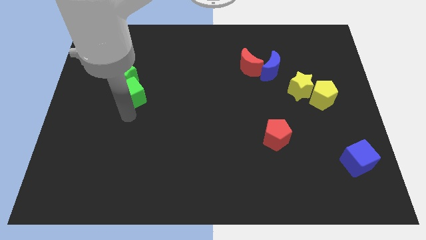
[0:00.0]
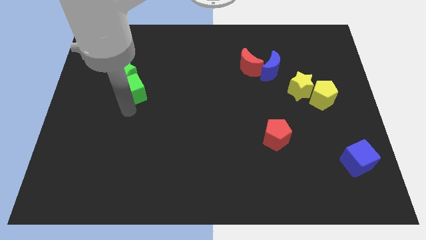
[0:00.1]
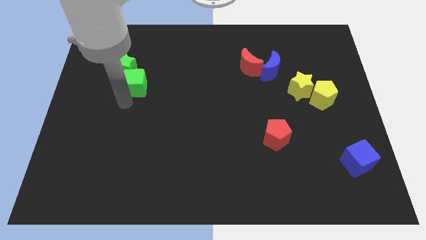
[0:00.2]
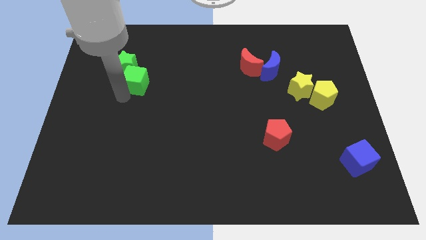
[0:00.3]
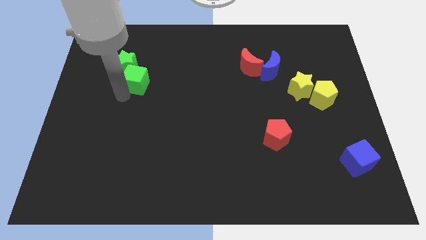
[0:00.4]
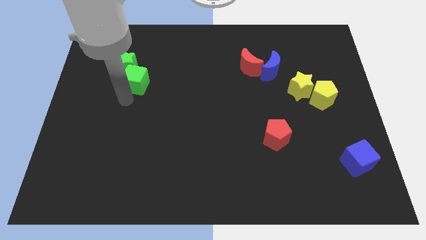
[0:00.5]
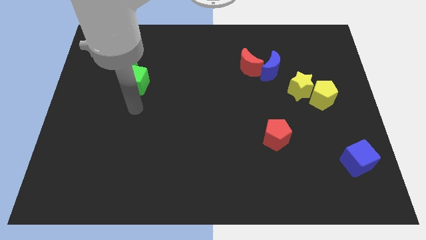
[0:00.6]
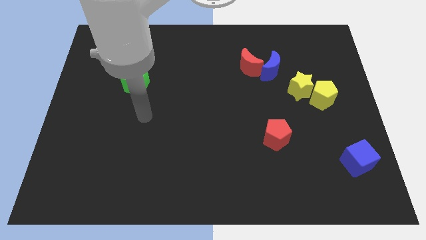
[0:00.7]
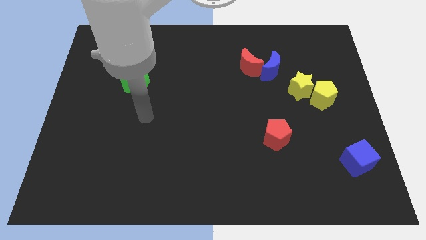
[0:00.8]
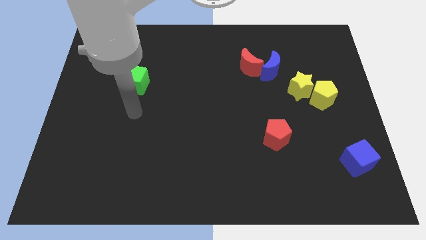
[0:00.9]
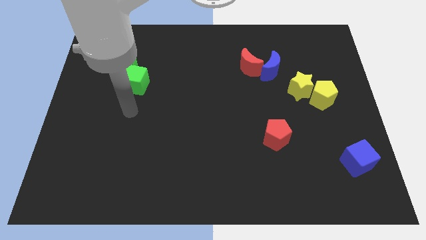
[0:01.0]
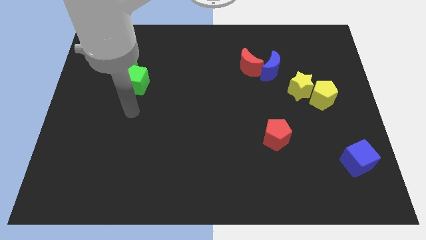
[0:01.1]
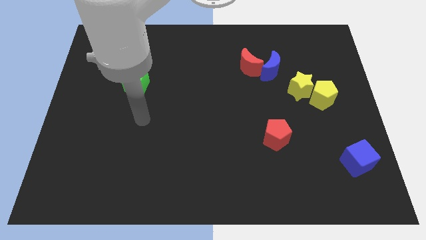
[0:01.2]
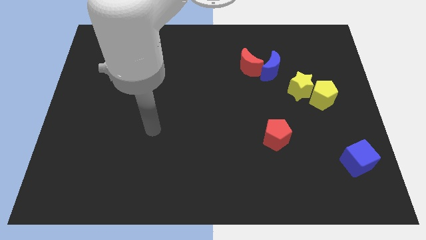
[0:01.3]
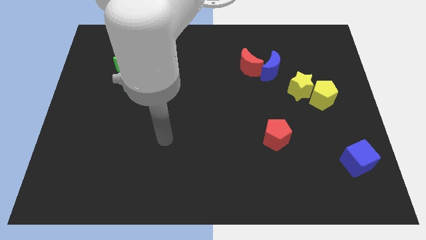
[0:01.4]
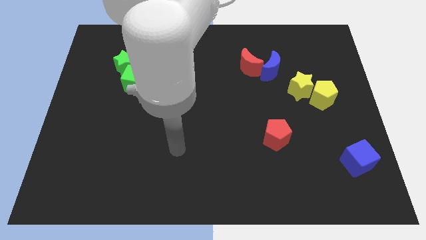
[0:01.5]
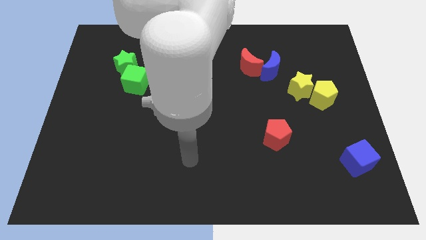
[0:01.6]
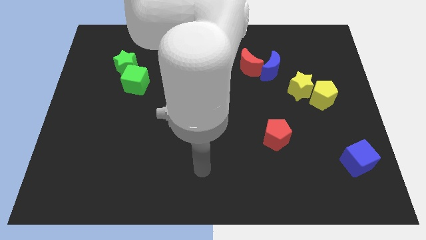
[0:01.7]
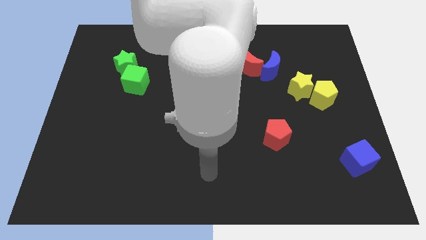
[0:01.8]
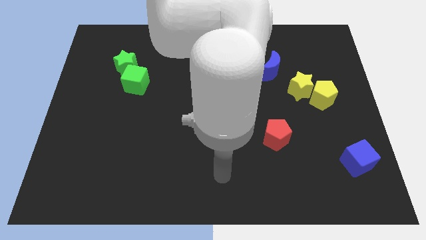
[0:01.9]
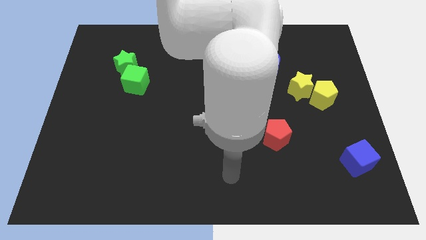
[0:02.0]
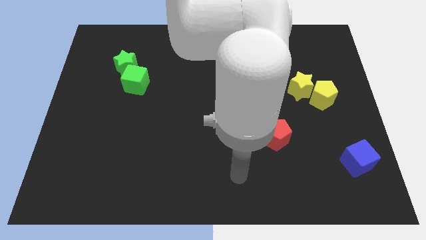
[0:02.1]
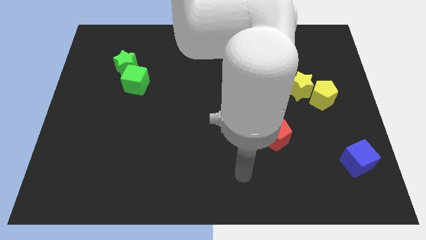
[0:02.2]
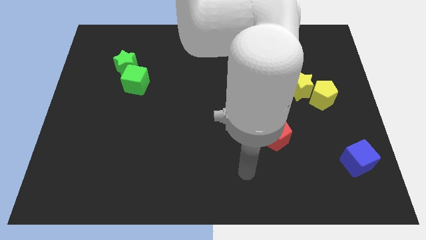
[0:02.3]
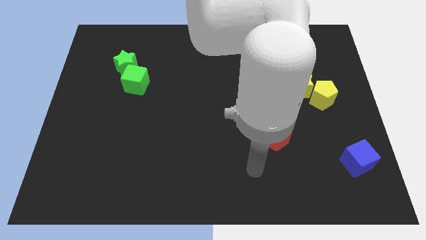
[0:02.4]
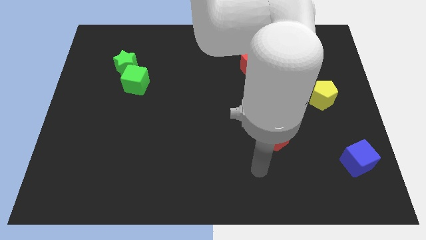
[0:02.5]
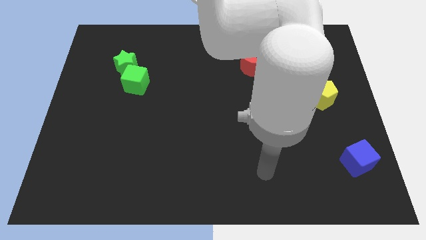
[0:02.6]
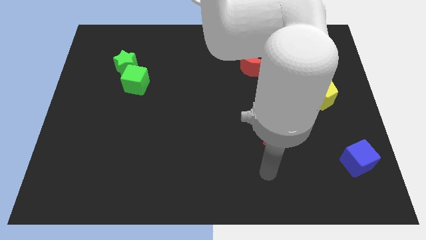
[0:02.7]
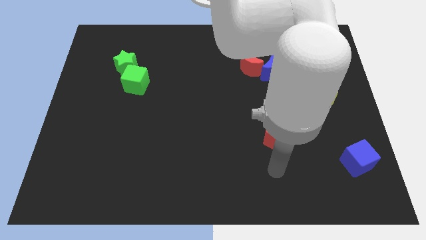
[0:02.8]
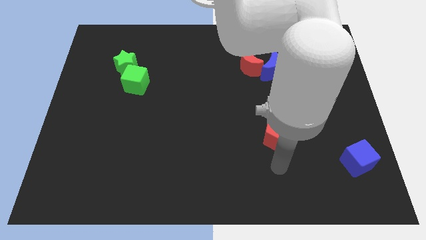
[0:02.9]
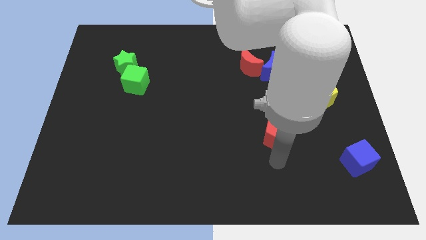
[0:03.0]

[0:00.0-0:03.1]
place your arm at the bottom side of the red pentagon

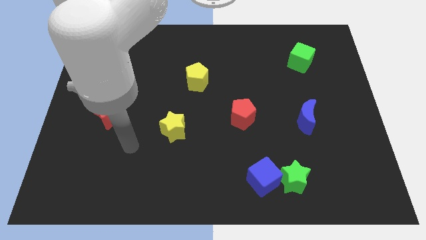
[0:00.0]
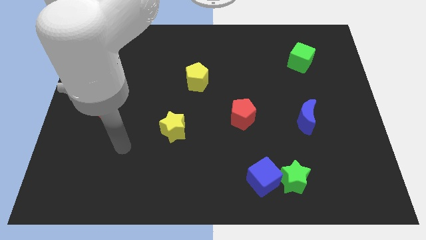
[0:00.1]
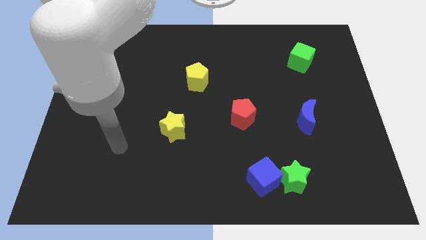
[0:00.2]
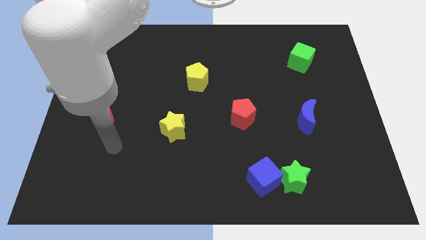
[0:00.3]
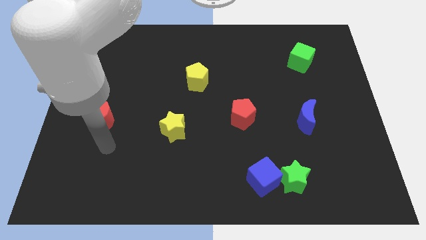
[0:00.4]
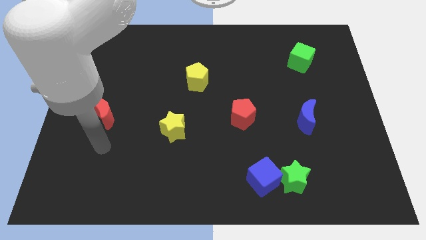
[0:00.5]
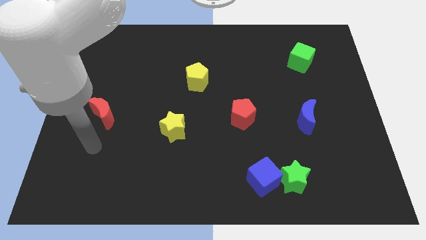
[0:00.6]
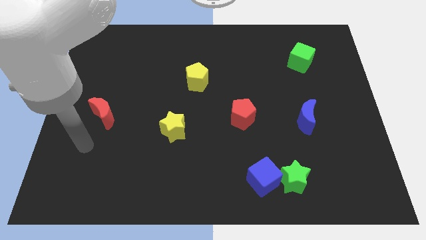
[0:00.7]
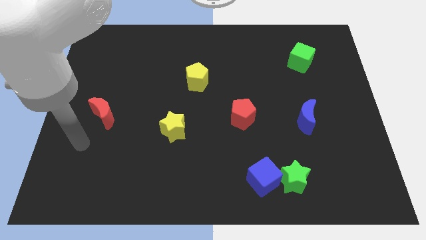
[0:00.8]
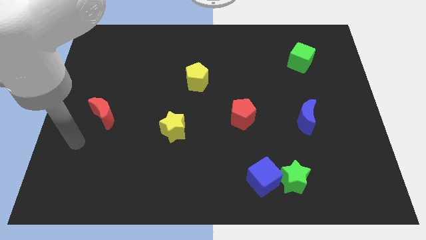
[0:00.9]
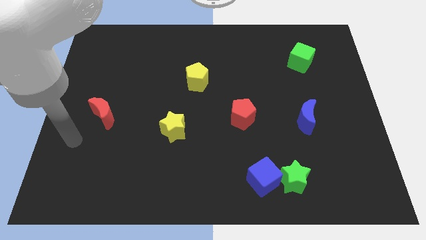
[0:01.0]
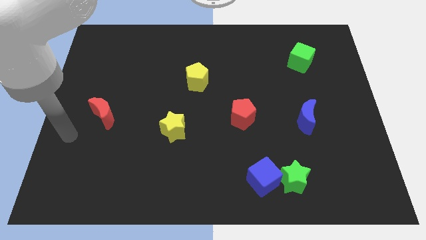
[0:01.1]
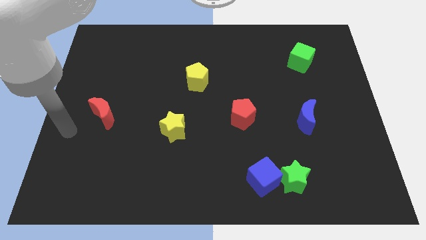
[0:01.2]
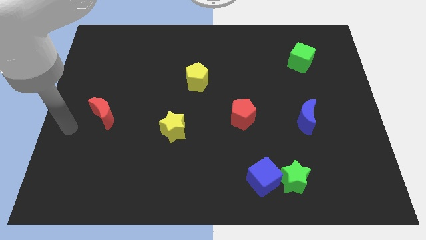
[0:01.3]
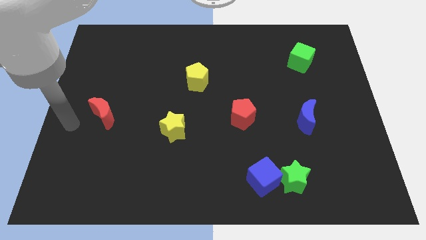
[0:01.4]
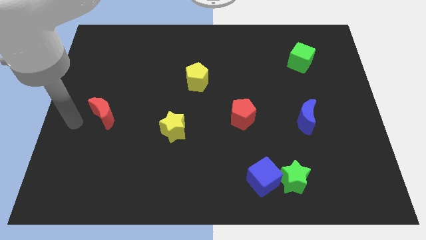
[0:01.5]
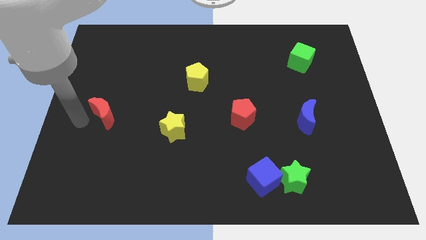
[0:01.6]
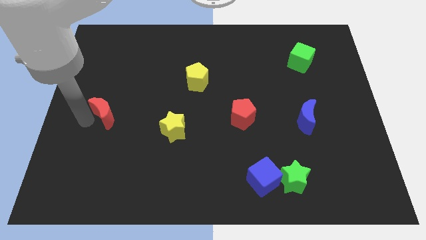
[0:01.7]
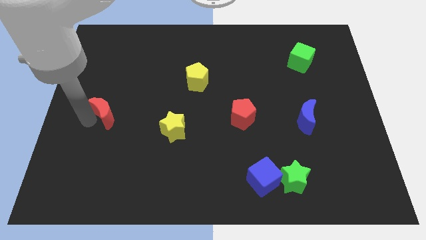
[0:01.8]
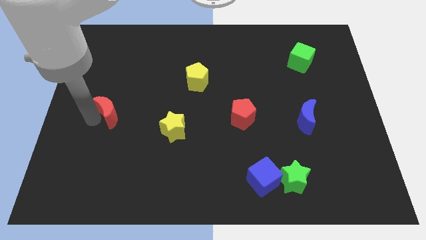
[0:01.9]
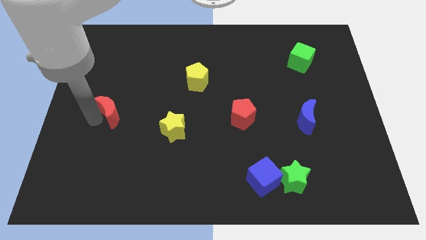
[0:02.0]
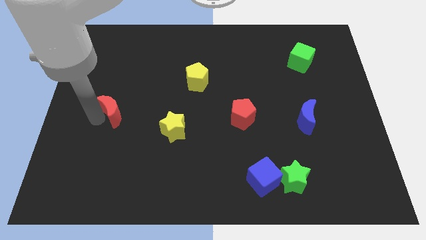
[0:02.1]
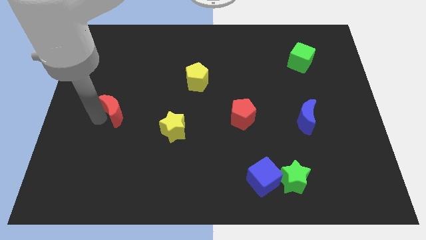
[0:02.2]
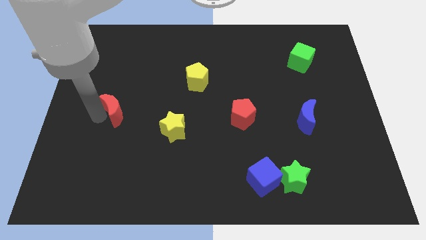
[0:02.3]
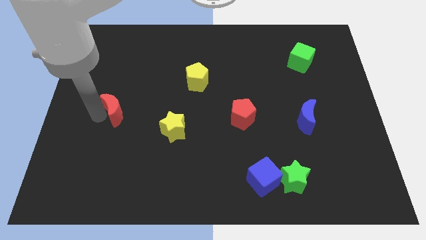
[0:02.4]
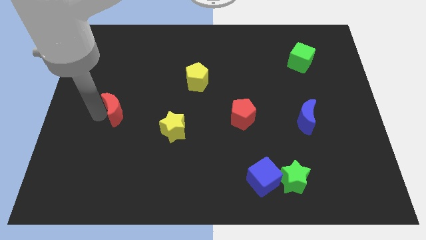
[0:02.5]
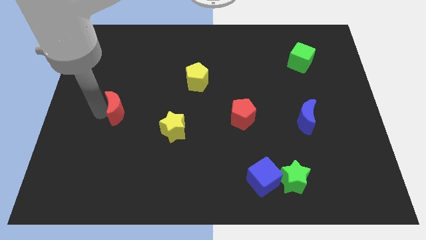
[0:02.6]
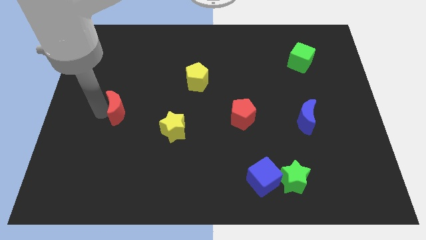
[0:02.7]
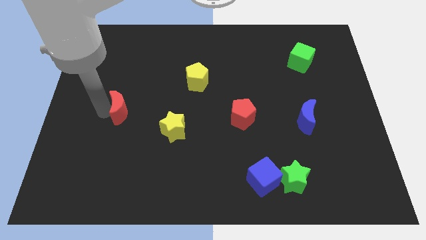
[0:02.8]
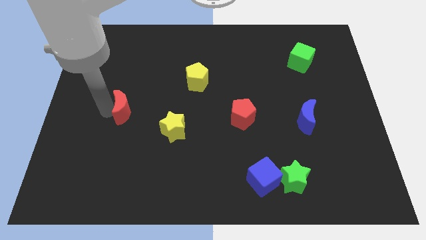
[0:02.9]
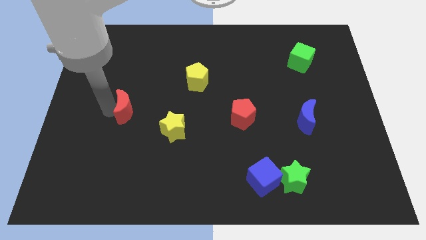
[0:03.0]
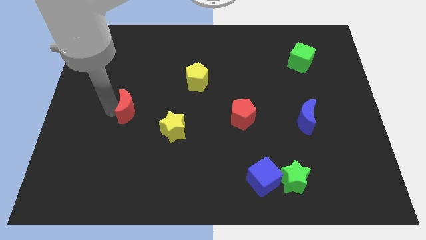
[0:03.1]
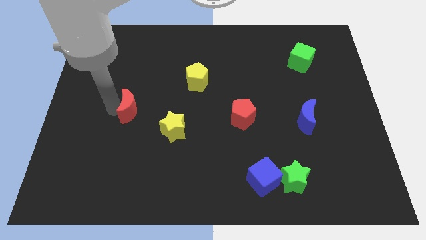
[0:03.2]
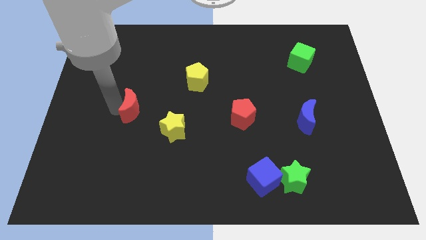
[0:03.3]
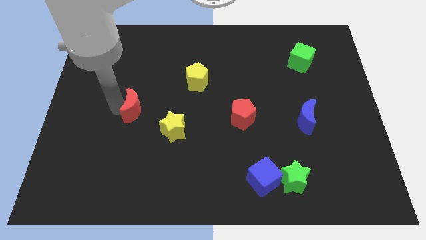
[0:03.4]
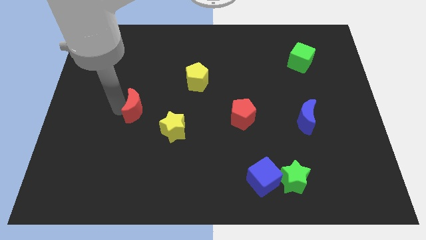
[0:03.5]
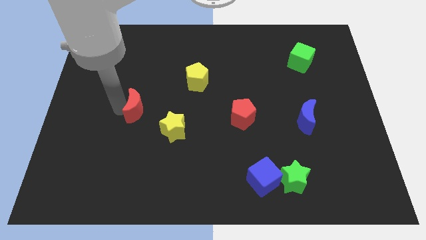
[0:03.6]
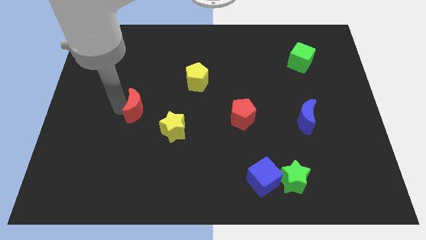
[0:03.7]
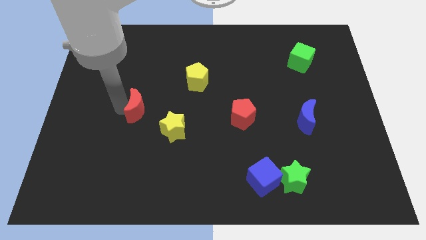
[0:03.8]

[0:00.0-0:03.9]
move the red crescent diagonal to the top left of the yellow star

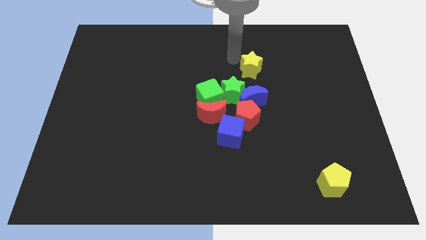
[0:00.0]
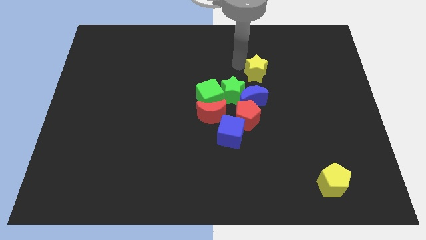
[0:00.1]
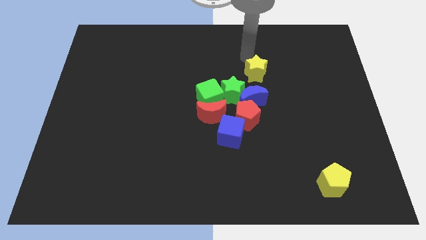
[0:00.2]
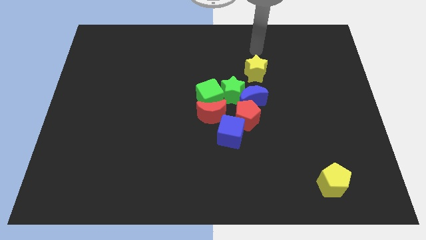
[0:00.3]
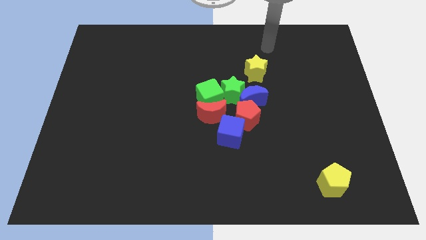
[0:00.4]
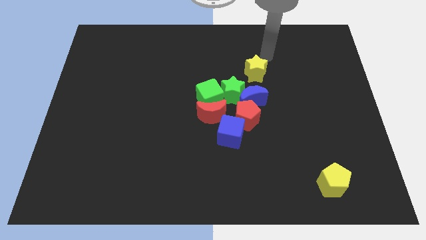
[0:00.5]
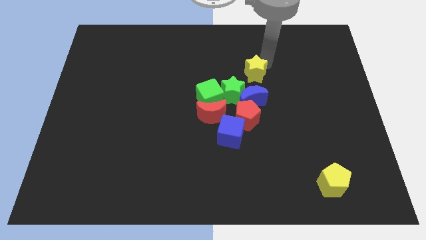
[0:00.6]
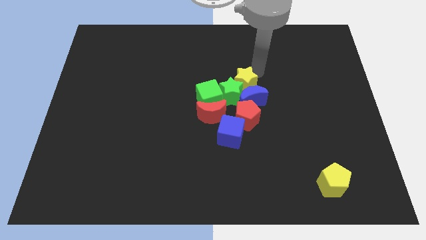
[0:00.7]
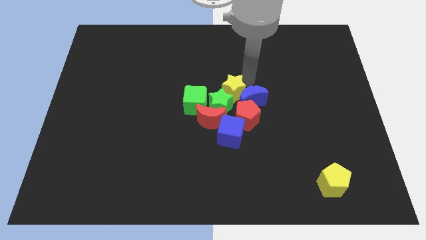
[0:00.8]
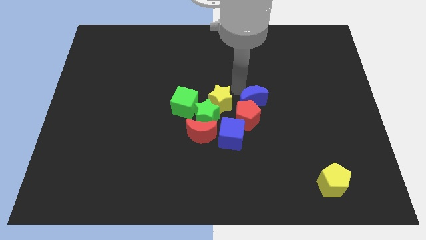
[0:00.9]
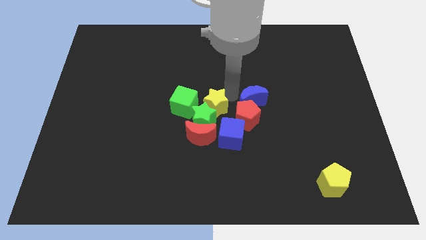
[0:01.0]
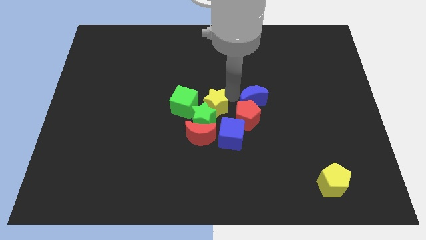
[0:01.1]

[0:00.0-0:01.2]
push the yellow star into the green star

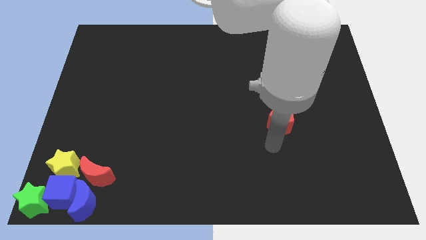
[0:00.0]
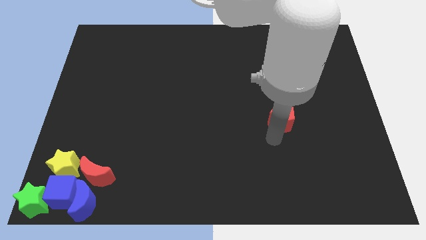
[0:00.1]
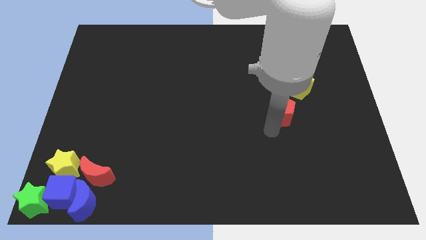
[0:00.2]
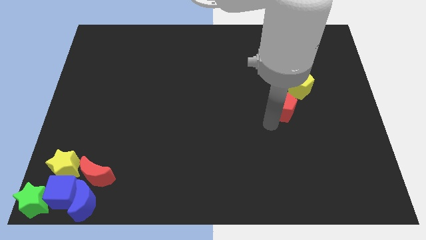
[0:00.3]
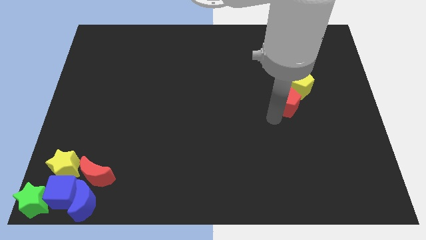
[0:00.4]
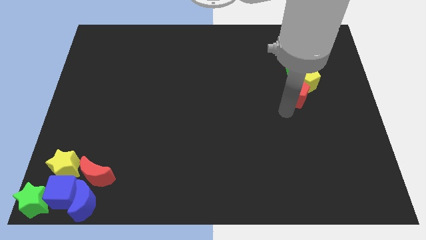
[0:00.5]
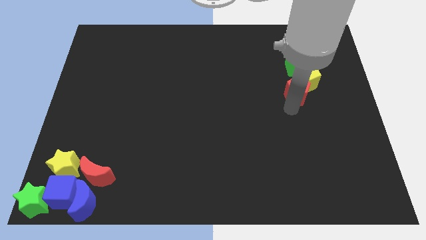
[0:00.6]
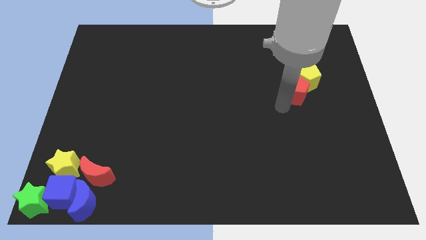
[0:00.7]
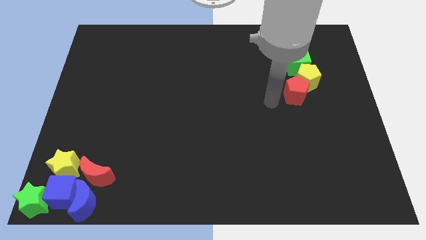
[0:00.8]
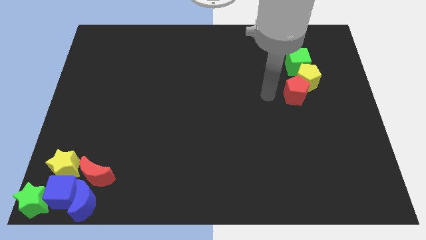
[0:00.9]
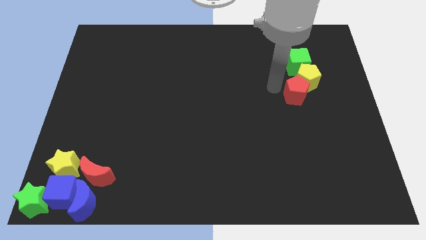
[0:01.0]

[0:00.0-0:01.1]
push red pentagon into yellow pentagon
